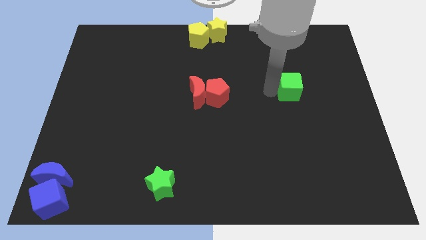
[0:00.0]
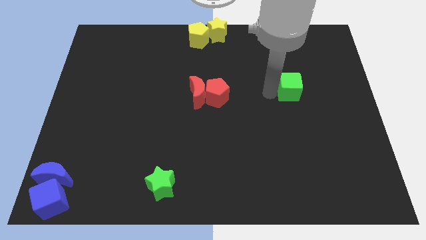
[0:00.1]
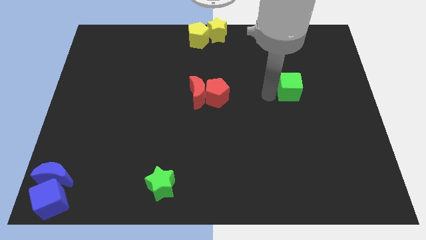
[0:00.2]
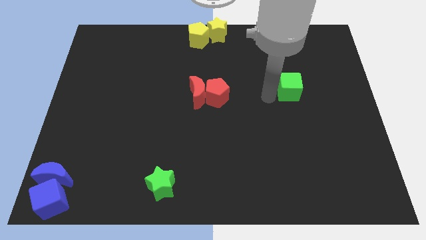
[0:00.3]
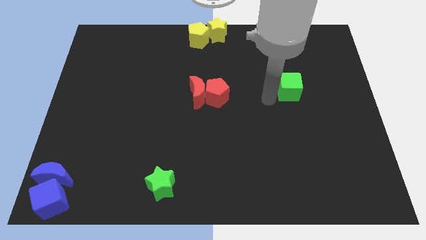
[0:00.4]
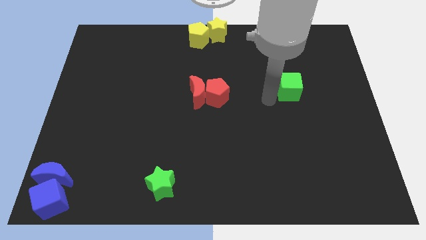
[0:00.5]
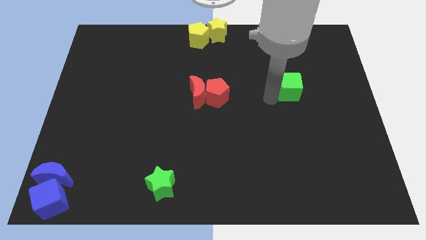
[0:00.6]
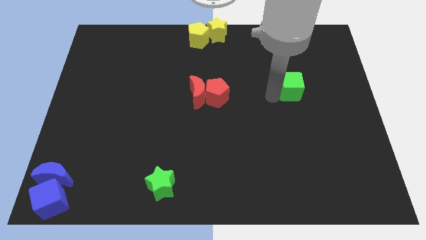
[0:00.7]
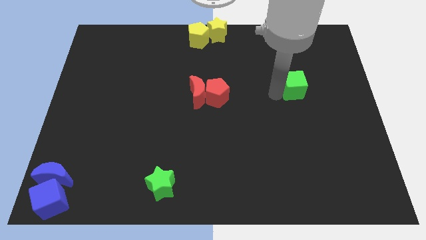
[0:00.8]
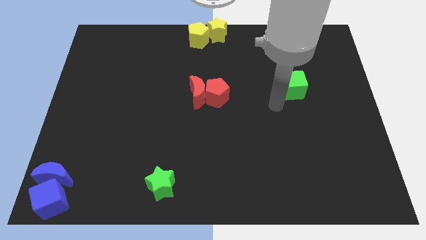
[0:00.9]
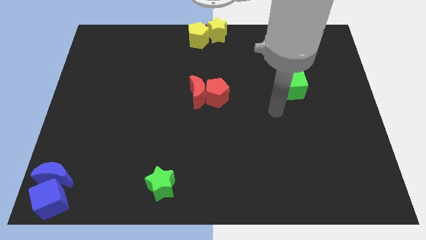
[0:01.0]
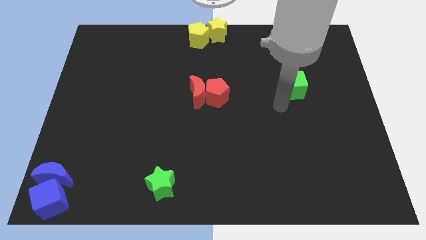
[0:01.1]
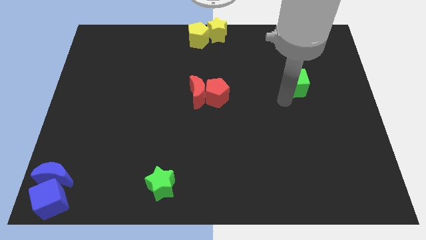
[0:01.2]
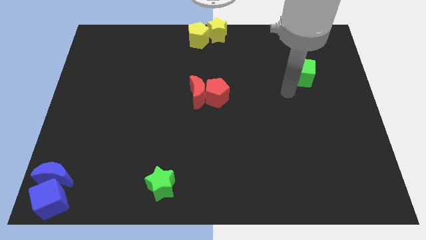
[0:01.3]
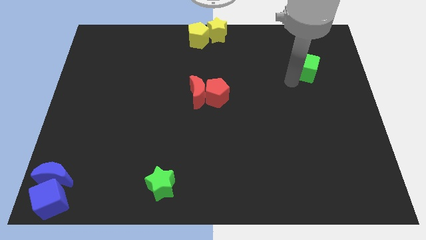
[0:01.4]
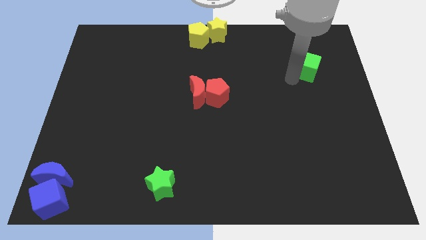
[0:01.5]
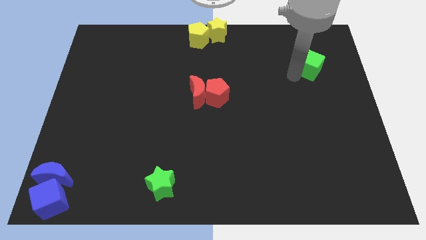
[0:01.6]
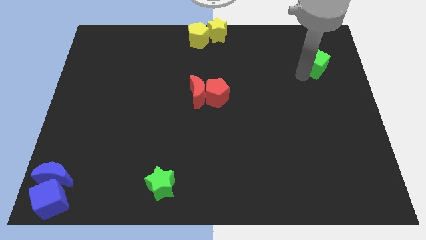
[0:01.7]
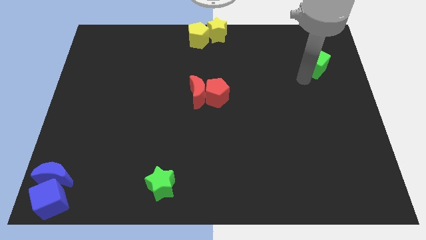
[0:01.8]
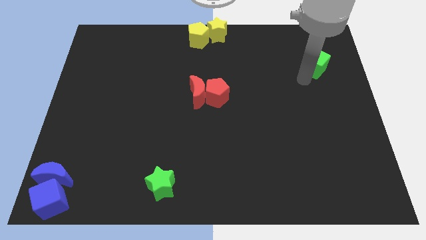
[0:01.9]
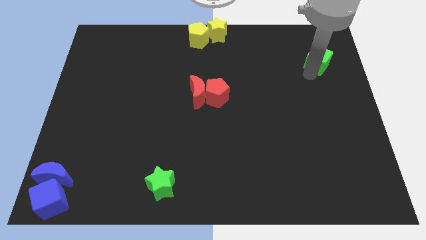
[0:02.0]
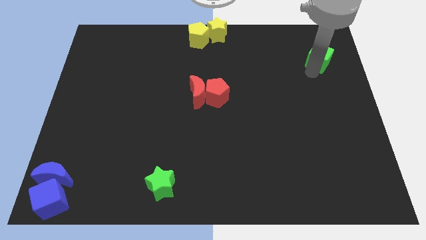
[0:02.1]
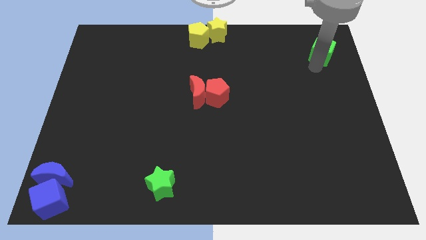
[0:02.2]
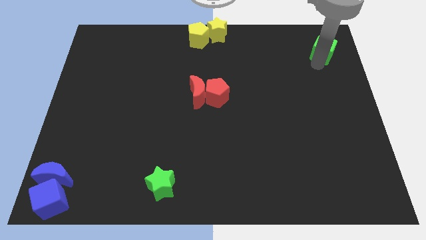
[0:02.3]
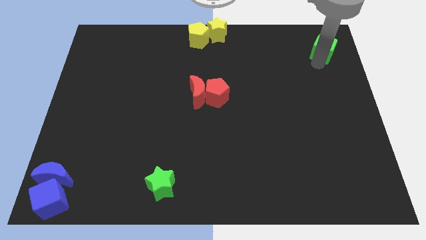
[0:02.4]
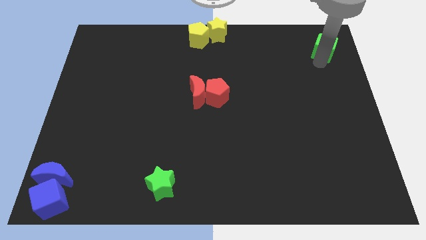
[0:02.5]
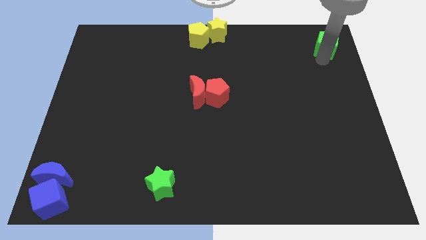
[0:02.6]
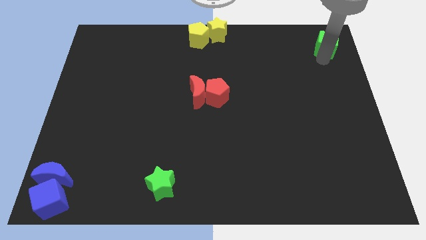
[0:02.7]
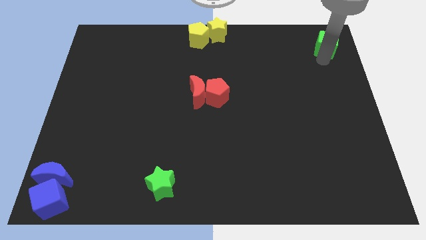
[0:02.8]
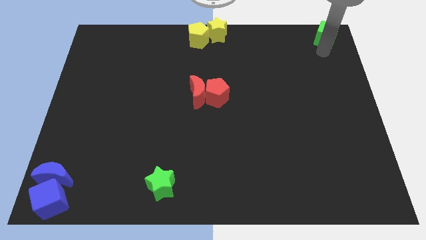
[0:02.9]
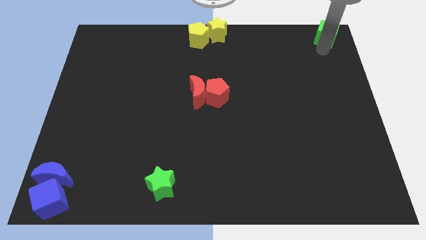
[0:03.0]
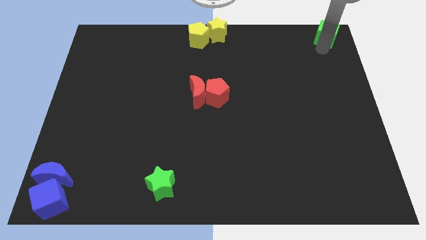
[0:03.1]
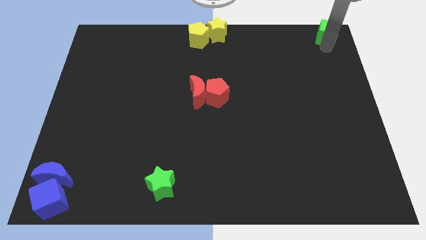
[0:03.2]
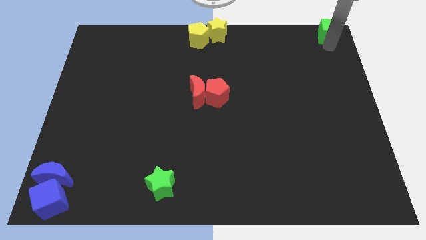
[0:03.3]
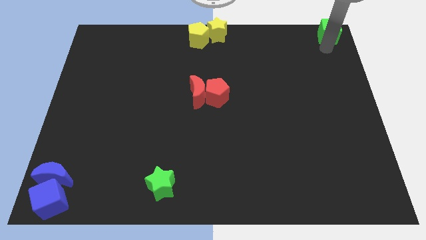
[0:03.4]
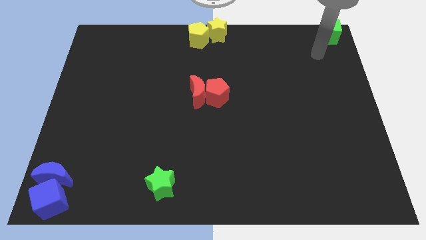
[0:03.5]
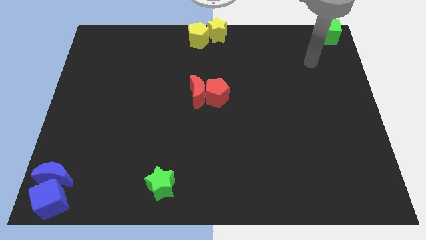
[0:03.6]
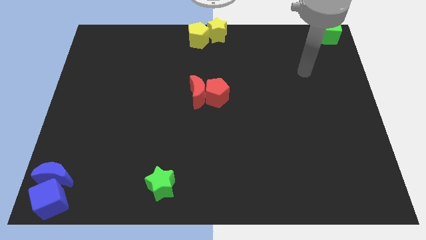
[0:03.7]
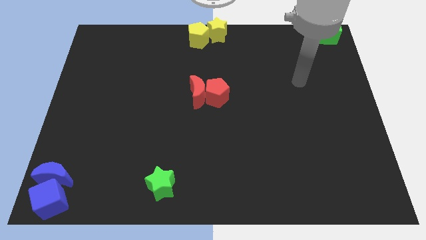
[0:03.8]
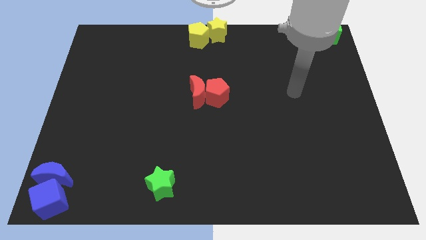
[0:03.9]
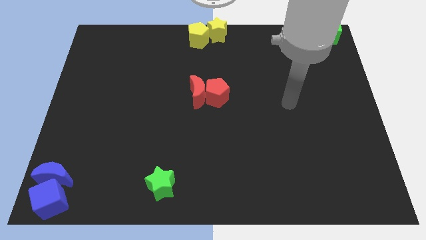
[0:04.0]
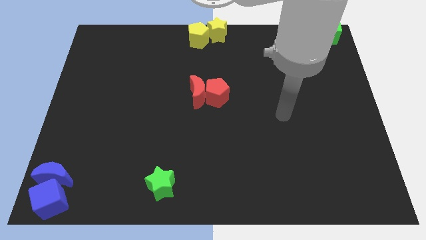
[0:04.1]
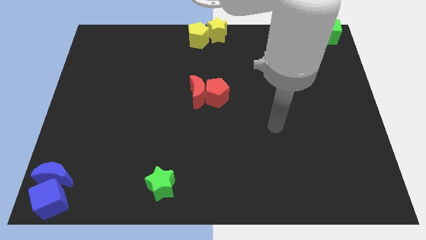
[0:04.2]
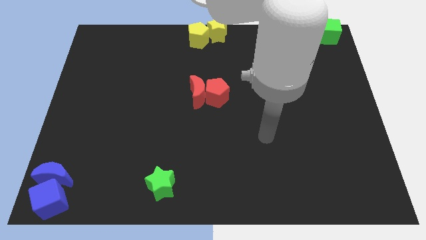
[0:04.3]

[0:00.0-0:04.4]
move green cube toward the top right corner

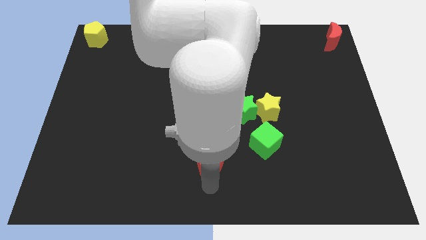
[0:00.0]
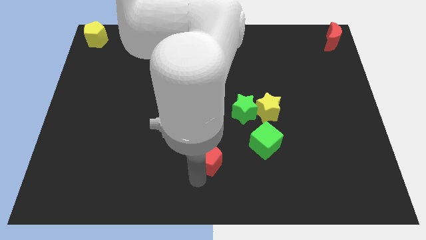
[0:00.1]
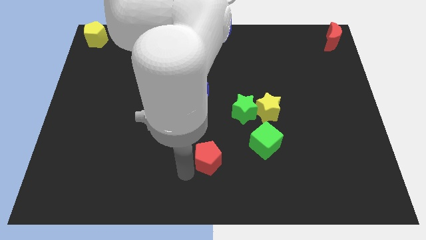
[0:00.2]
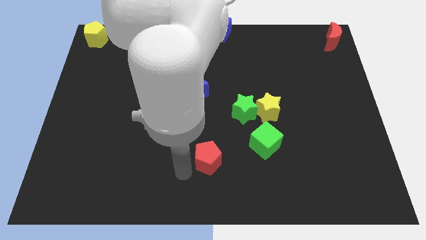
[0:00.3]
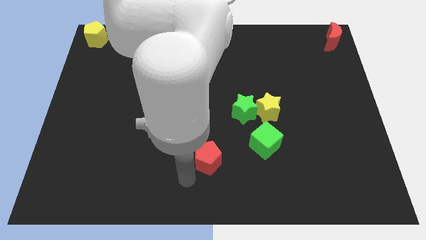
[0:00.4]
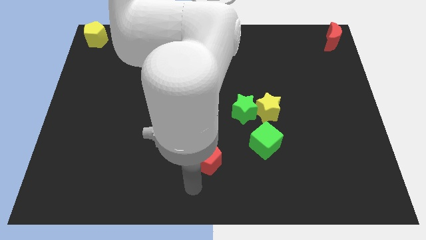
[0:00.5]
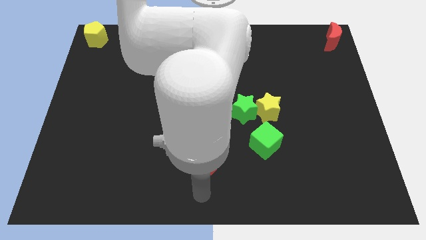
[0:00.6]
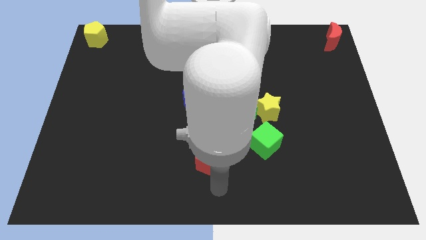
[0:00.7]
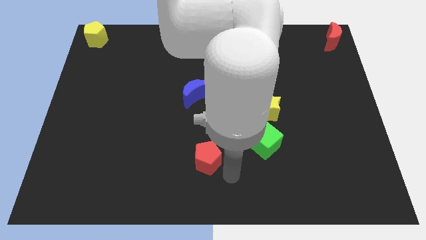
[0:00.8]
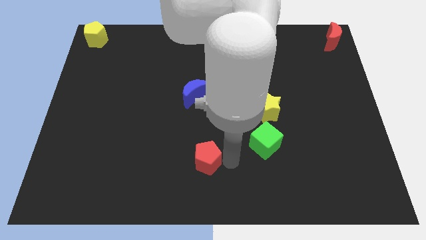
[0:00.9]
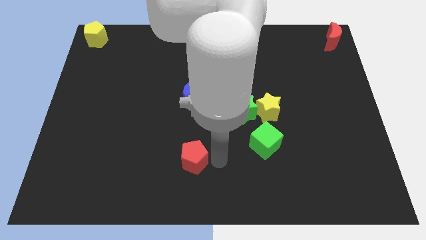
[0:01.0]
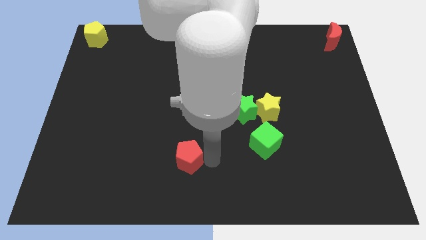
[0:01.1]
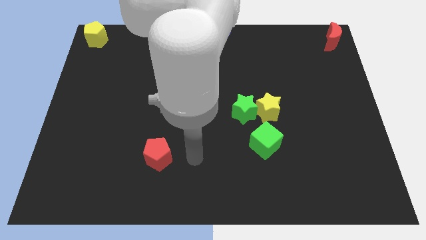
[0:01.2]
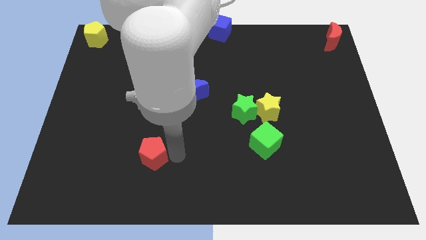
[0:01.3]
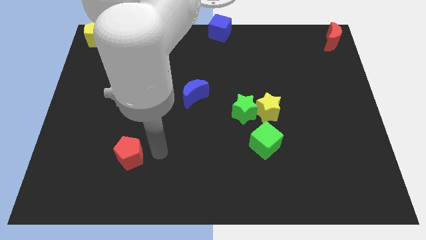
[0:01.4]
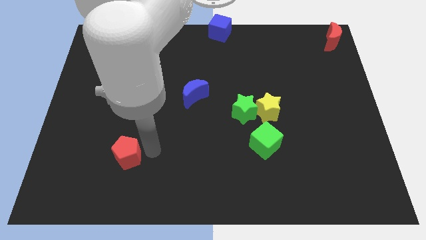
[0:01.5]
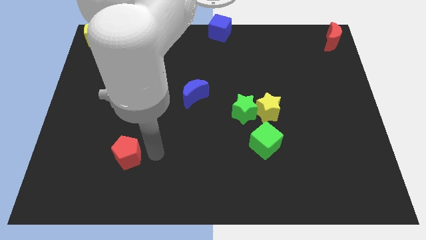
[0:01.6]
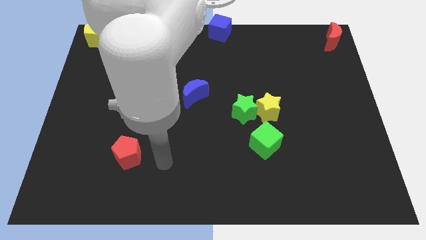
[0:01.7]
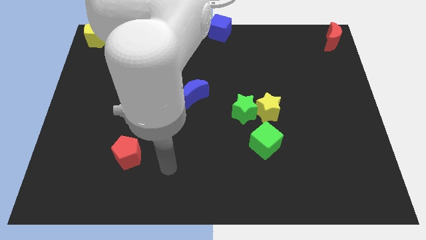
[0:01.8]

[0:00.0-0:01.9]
move the red pentagon to the left

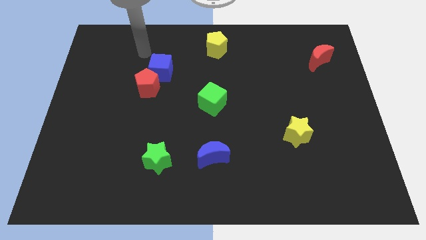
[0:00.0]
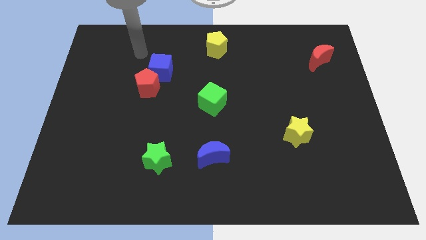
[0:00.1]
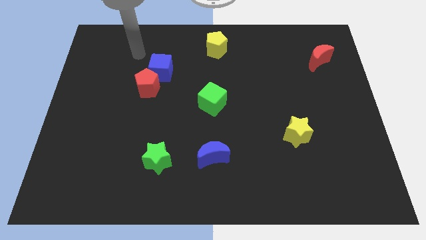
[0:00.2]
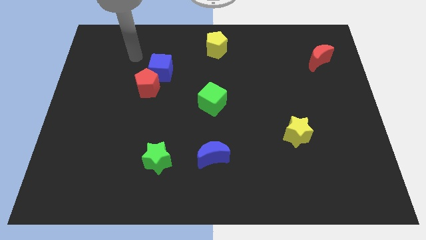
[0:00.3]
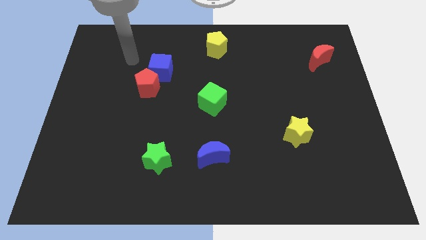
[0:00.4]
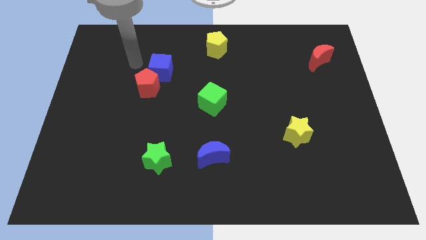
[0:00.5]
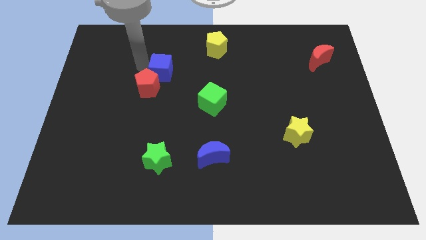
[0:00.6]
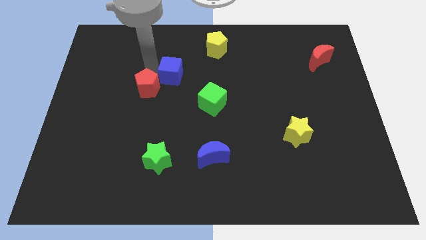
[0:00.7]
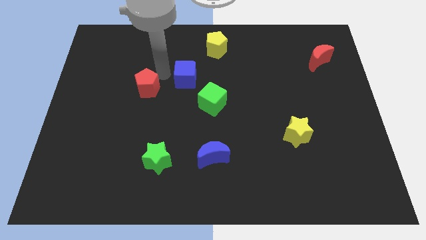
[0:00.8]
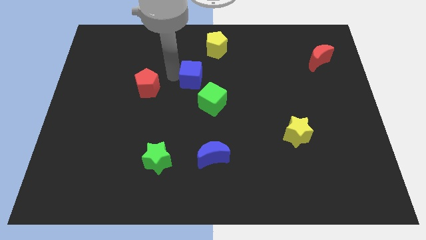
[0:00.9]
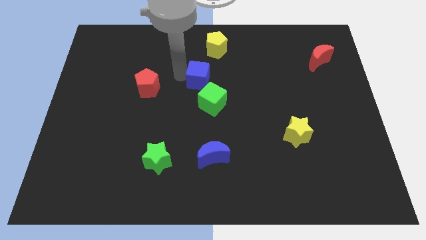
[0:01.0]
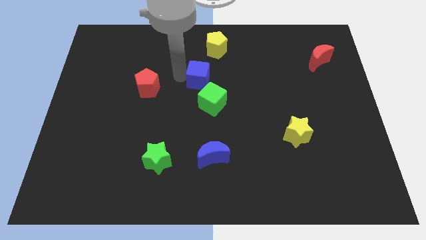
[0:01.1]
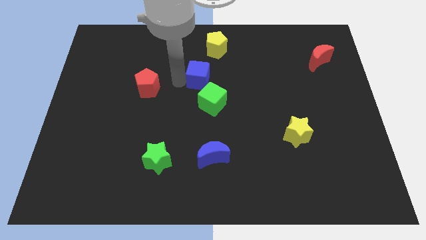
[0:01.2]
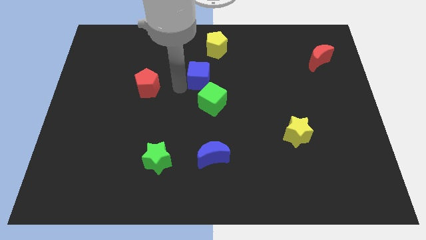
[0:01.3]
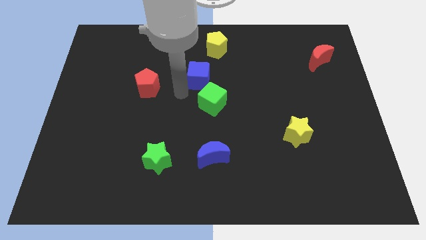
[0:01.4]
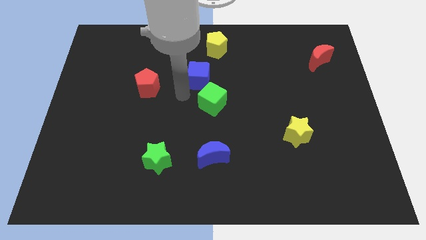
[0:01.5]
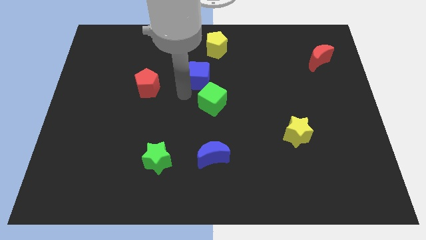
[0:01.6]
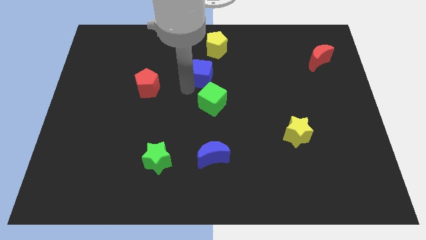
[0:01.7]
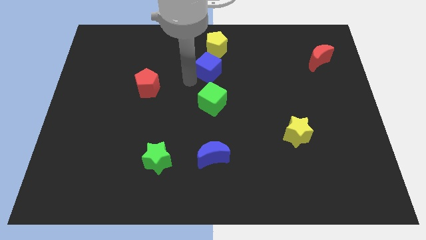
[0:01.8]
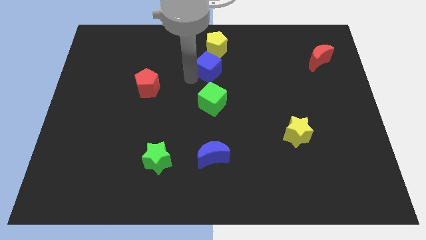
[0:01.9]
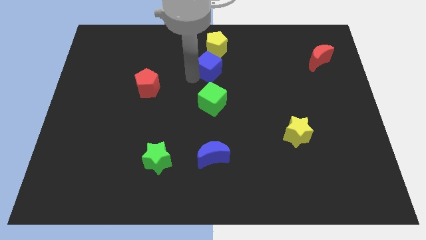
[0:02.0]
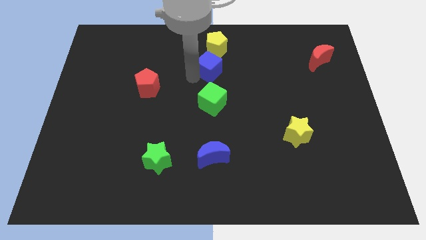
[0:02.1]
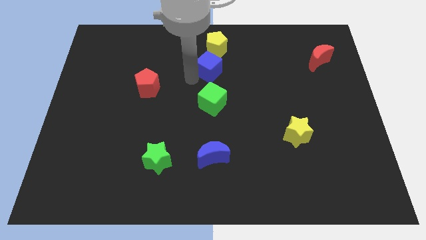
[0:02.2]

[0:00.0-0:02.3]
place the blue block under the yellow pentagon

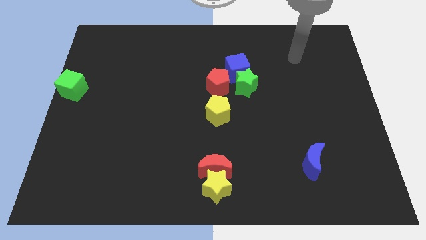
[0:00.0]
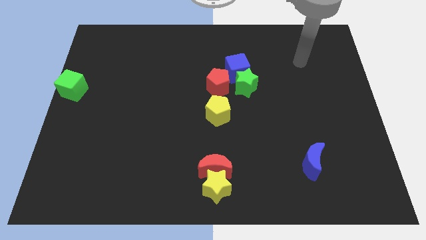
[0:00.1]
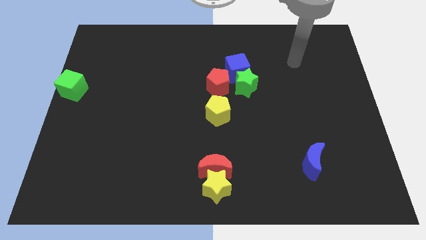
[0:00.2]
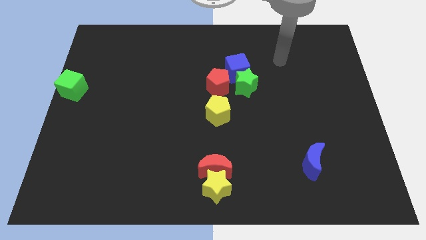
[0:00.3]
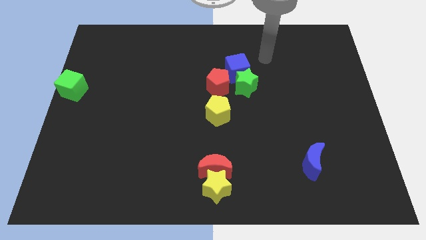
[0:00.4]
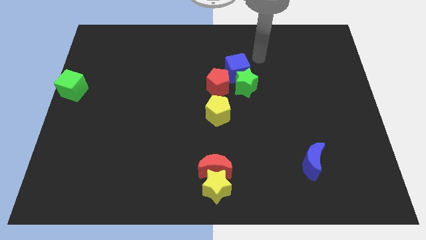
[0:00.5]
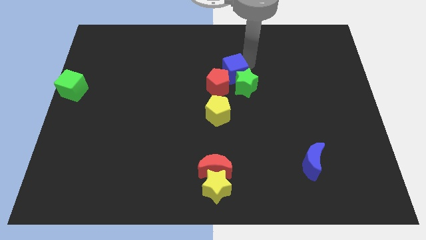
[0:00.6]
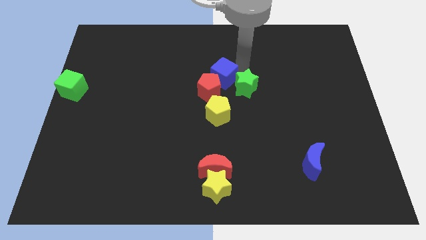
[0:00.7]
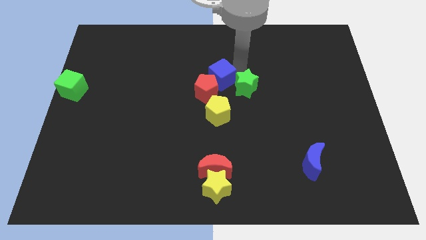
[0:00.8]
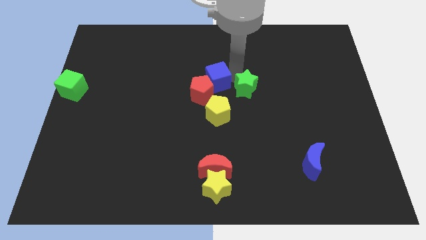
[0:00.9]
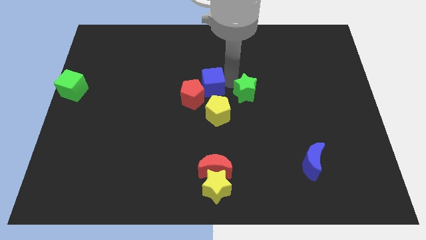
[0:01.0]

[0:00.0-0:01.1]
place blue cube on top of yellow pentagon
